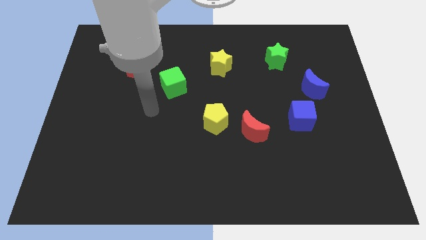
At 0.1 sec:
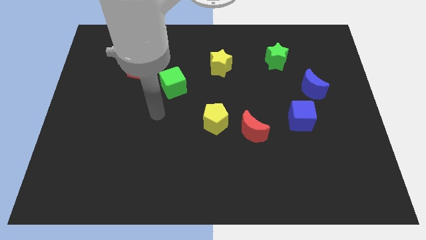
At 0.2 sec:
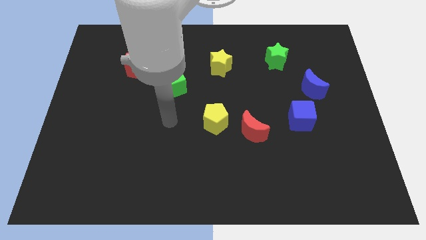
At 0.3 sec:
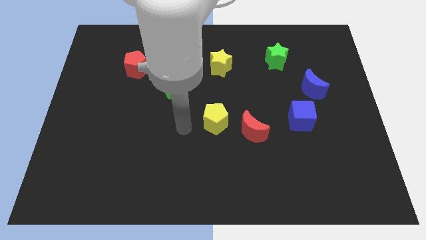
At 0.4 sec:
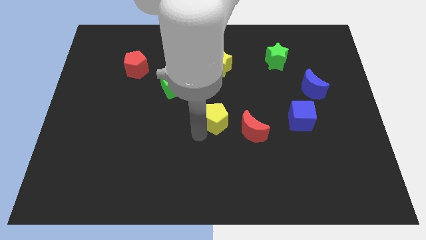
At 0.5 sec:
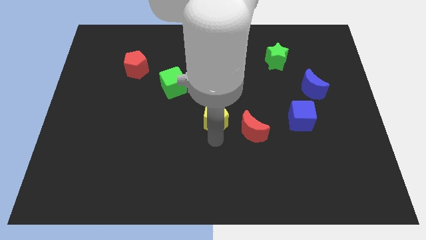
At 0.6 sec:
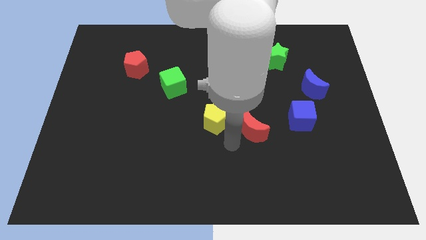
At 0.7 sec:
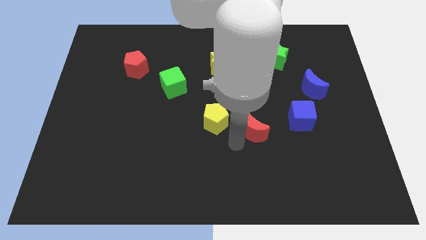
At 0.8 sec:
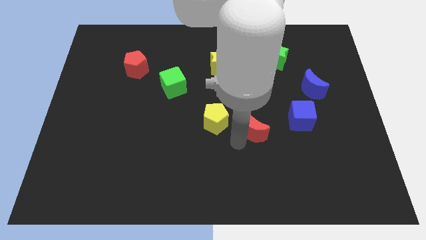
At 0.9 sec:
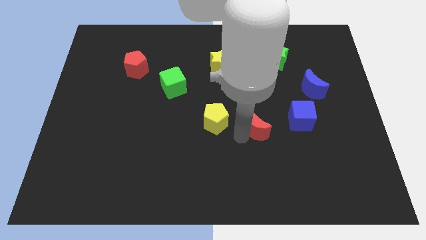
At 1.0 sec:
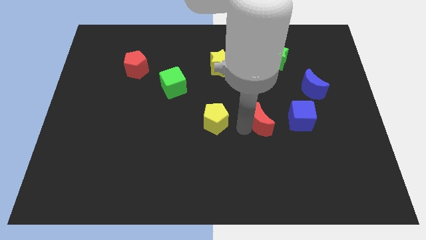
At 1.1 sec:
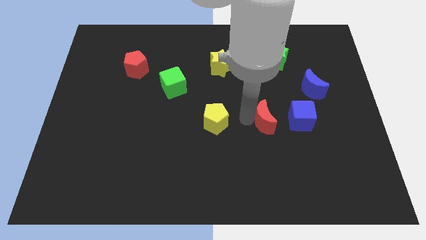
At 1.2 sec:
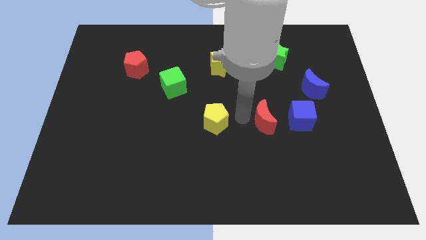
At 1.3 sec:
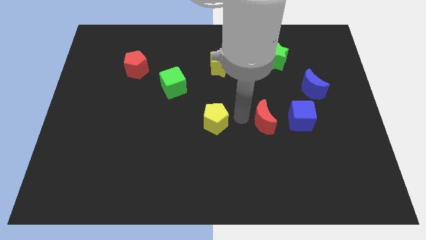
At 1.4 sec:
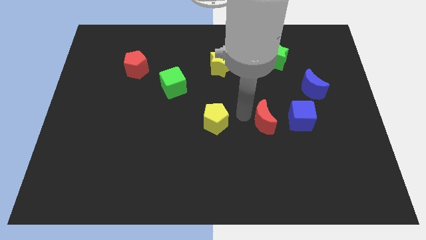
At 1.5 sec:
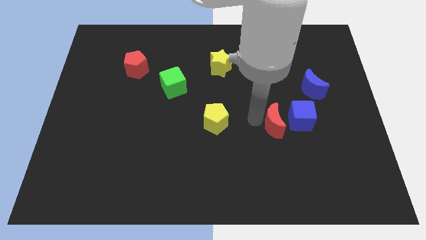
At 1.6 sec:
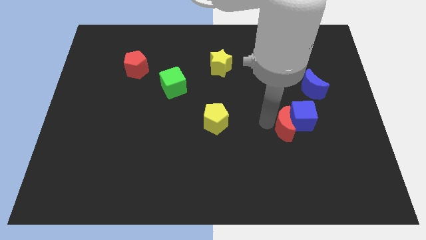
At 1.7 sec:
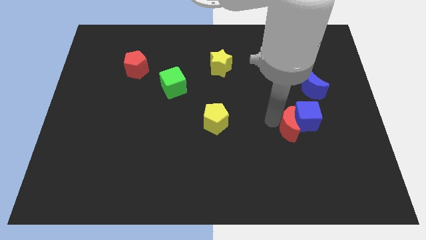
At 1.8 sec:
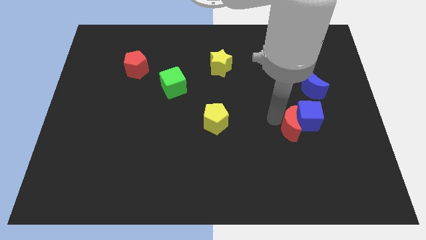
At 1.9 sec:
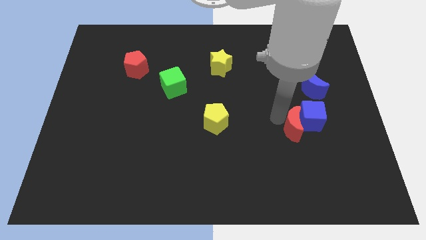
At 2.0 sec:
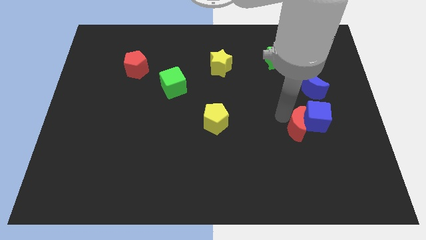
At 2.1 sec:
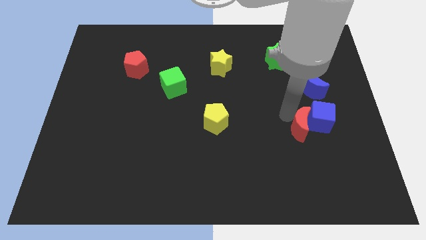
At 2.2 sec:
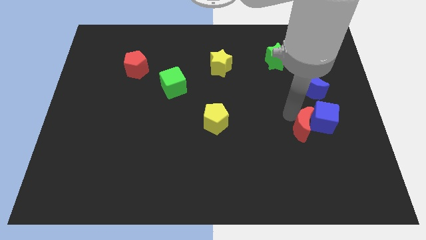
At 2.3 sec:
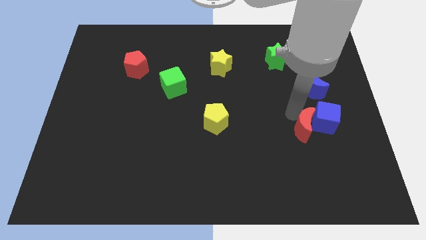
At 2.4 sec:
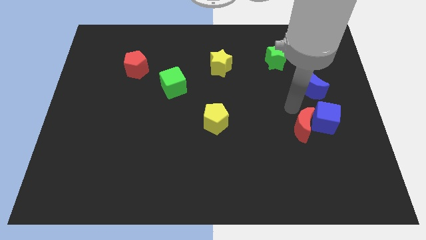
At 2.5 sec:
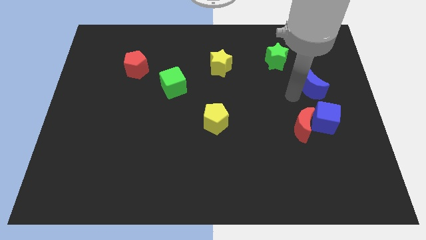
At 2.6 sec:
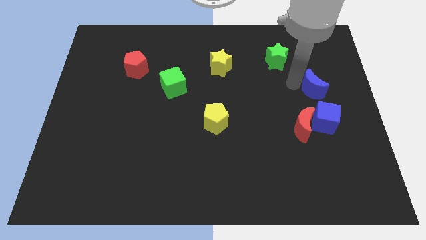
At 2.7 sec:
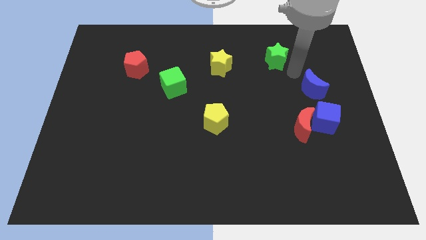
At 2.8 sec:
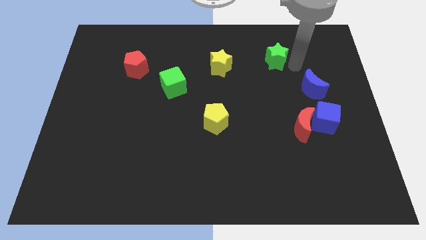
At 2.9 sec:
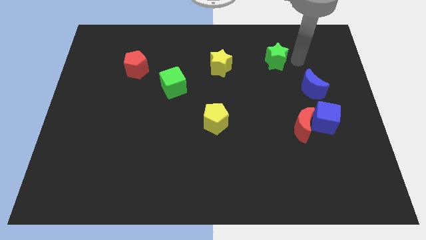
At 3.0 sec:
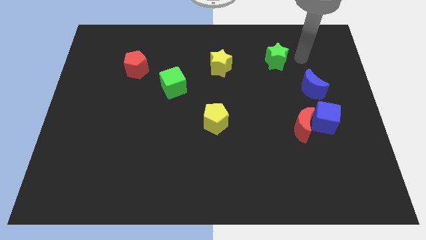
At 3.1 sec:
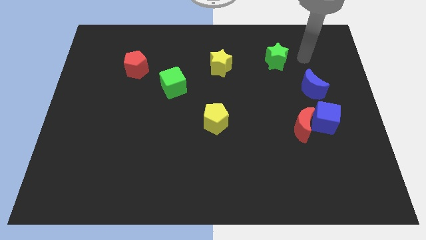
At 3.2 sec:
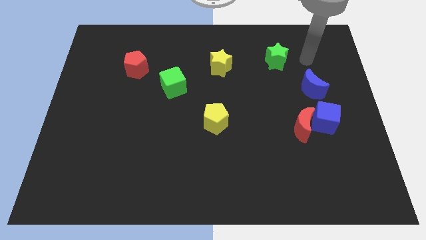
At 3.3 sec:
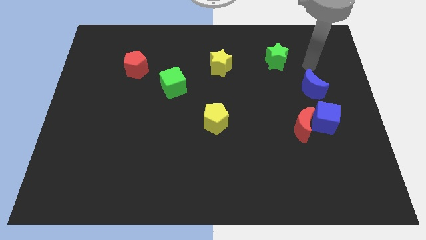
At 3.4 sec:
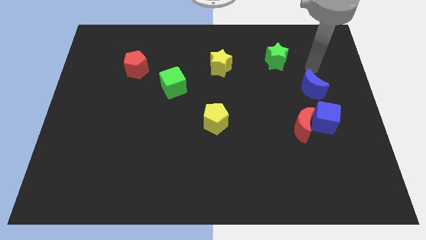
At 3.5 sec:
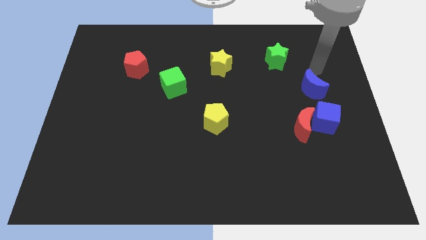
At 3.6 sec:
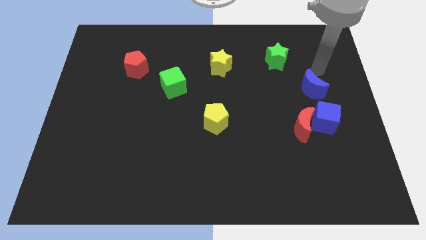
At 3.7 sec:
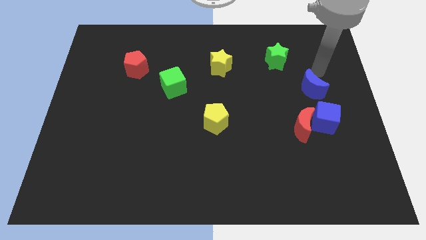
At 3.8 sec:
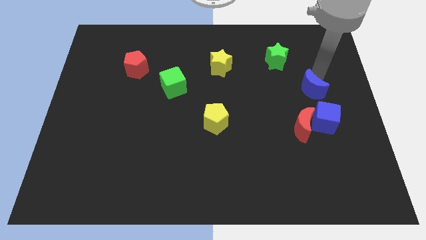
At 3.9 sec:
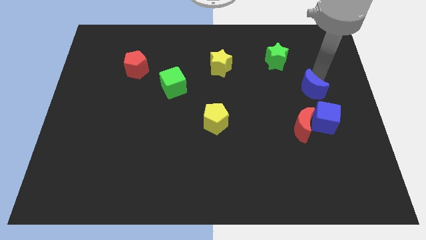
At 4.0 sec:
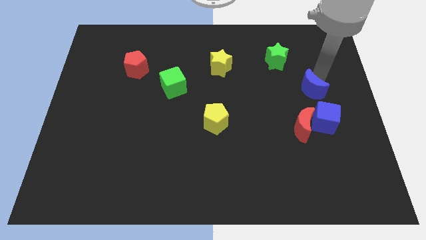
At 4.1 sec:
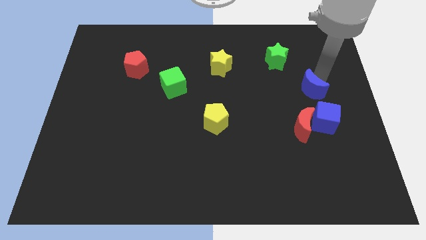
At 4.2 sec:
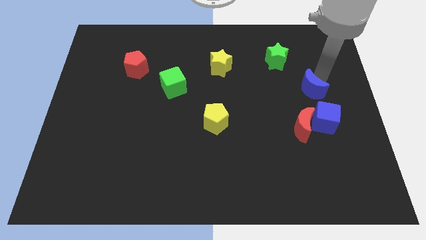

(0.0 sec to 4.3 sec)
push the red crescent into the blue cube

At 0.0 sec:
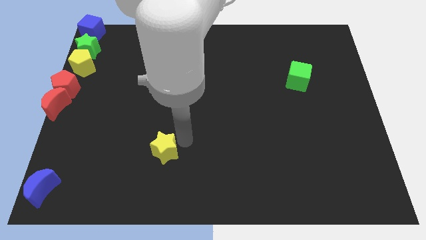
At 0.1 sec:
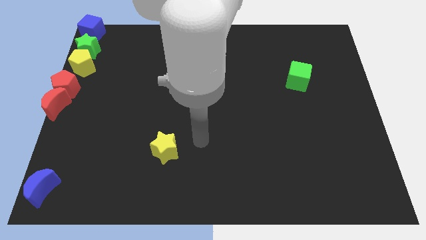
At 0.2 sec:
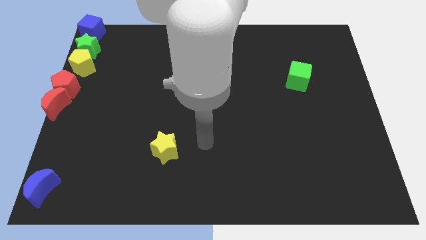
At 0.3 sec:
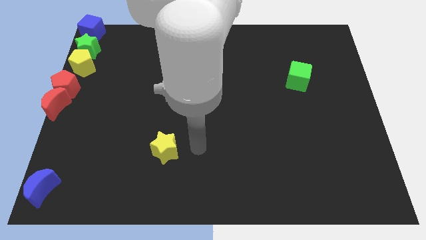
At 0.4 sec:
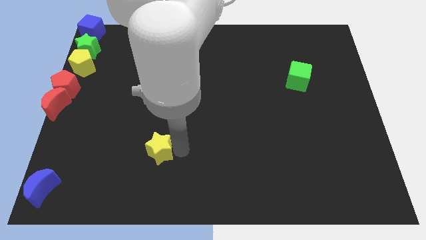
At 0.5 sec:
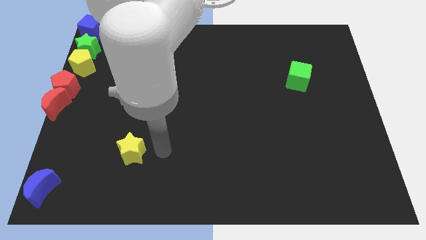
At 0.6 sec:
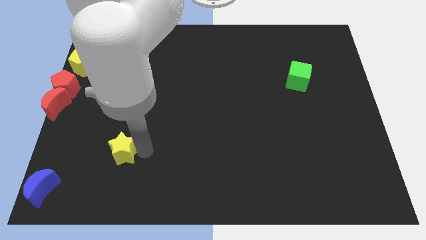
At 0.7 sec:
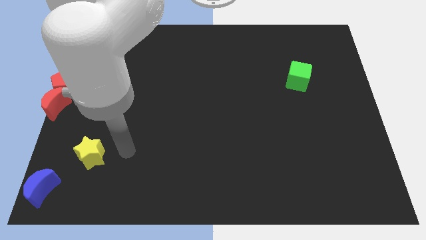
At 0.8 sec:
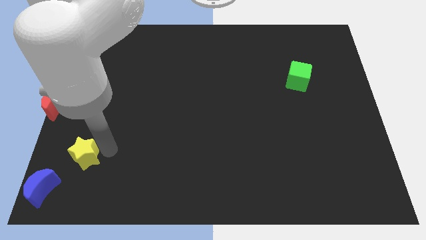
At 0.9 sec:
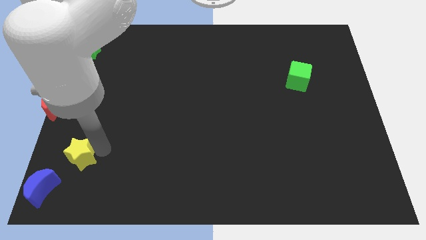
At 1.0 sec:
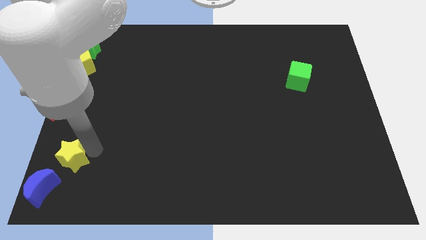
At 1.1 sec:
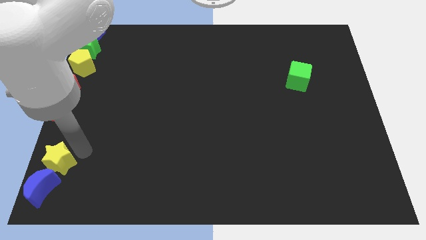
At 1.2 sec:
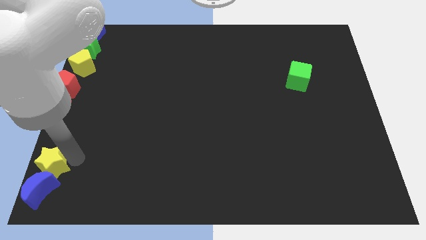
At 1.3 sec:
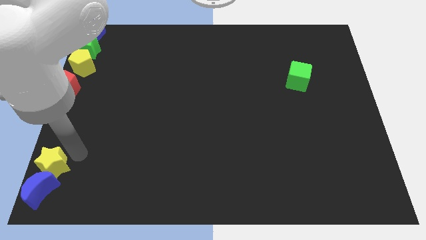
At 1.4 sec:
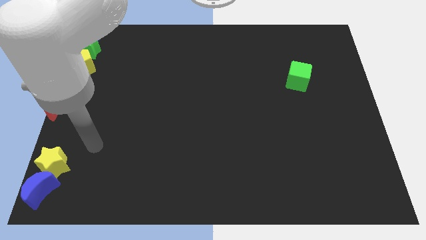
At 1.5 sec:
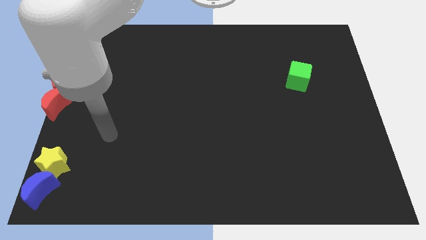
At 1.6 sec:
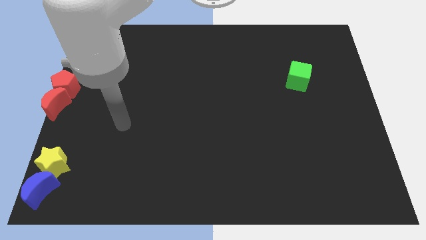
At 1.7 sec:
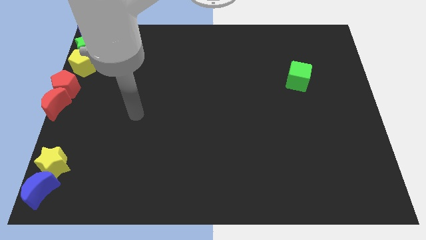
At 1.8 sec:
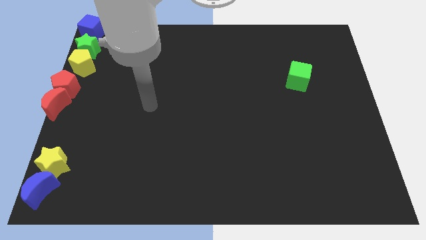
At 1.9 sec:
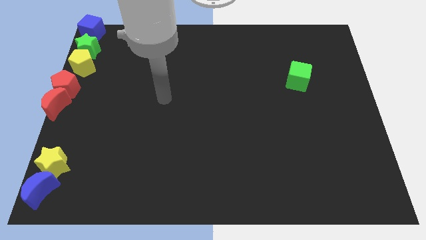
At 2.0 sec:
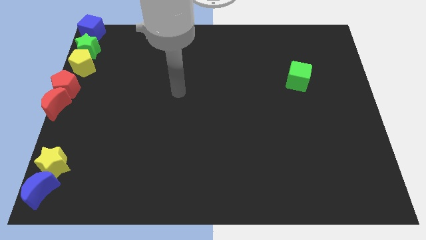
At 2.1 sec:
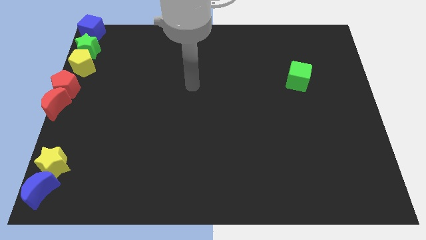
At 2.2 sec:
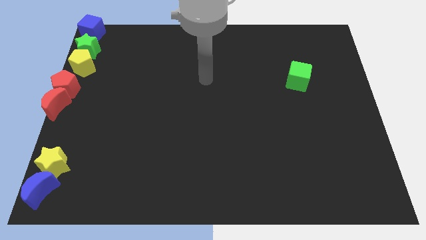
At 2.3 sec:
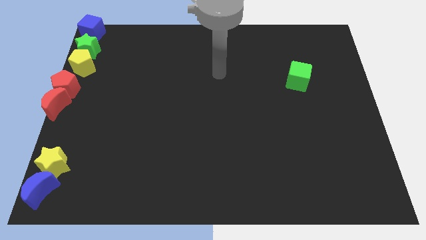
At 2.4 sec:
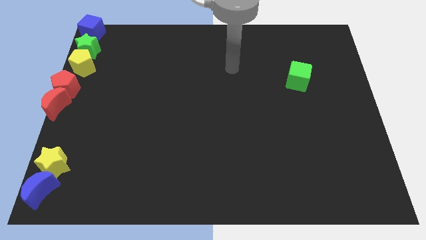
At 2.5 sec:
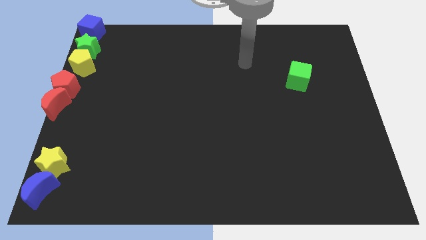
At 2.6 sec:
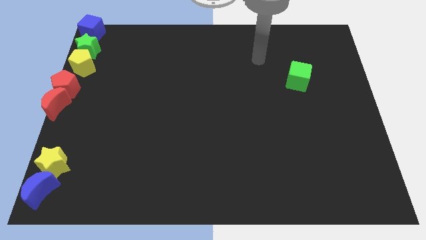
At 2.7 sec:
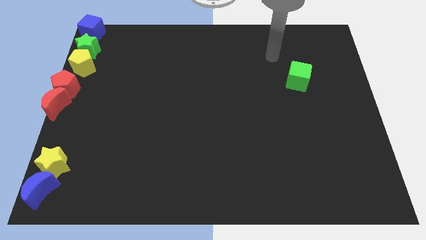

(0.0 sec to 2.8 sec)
move yellow star to the top of blue moon

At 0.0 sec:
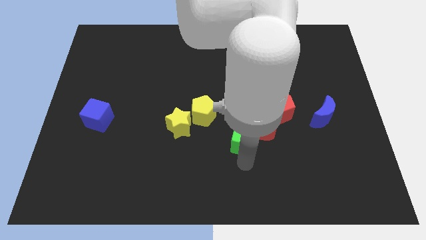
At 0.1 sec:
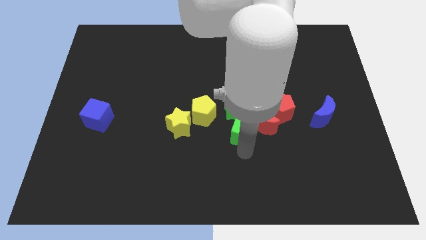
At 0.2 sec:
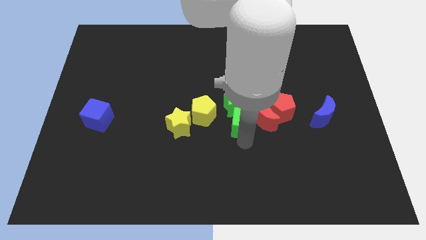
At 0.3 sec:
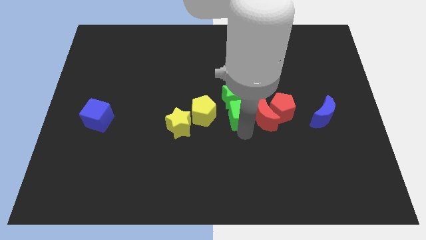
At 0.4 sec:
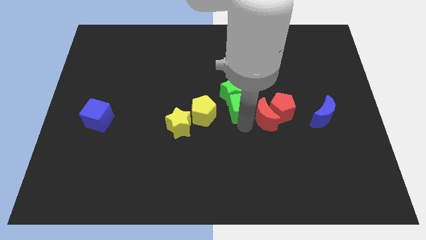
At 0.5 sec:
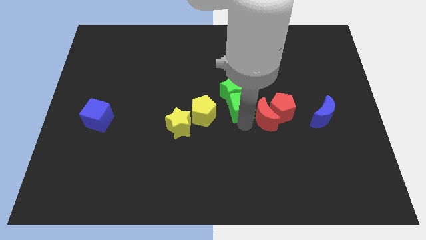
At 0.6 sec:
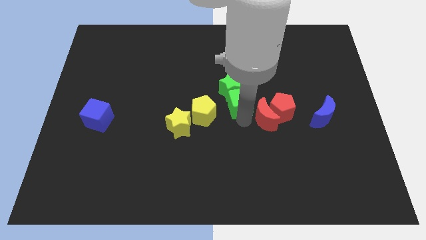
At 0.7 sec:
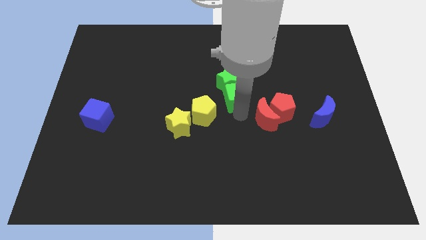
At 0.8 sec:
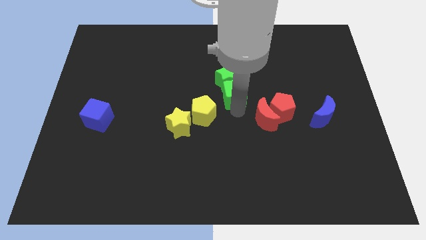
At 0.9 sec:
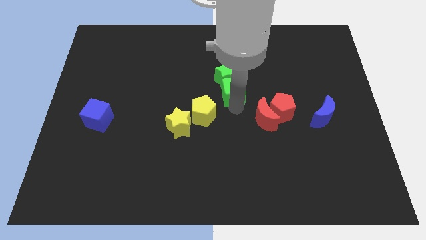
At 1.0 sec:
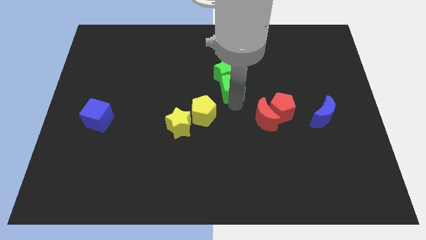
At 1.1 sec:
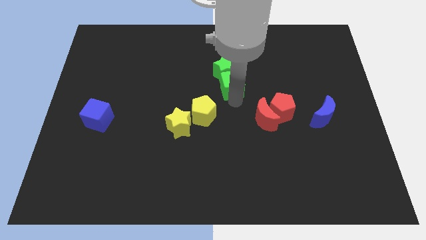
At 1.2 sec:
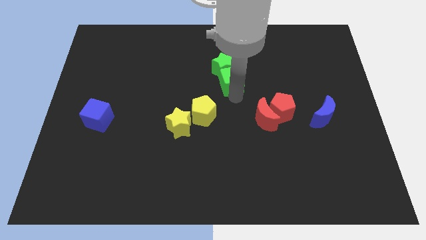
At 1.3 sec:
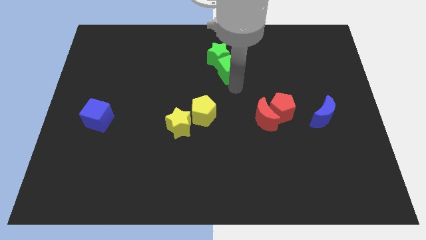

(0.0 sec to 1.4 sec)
push the green cube into the green star

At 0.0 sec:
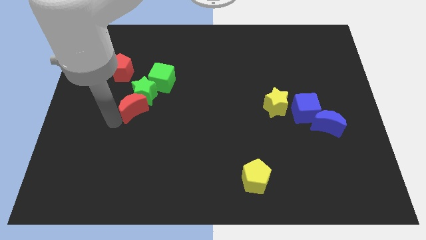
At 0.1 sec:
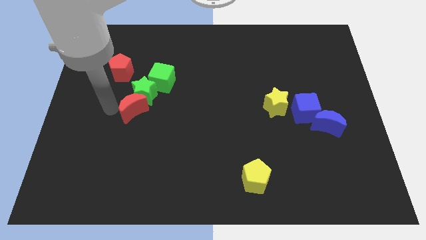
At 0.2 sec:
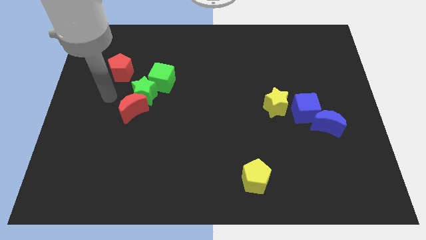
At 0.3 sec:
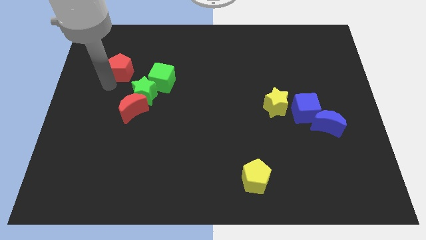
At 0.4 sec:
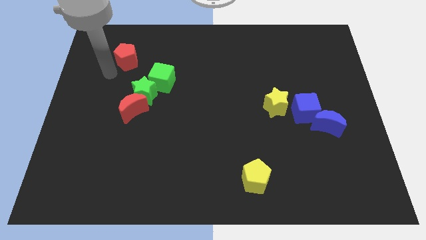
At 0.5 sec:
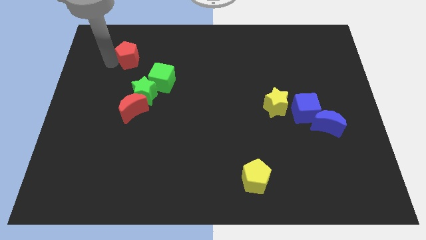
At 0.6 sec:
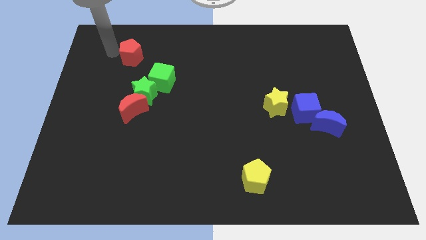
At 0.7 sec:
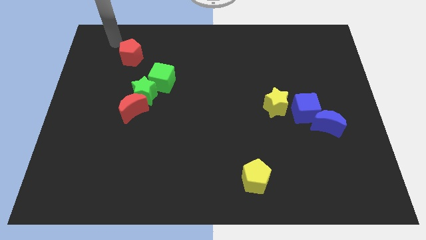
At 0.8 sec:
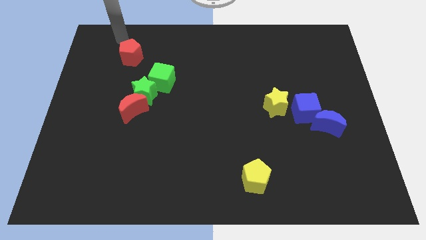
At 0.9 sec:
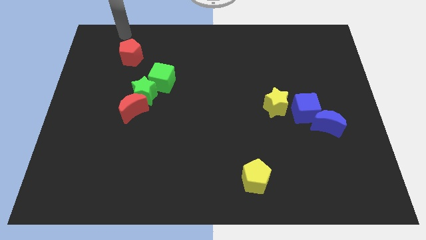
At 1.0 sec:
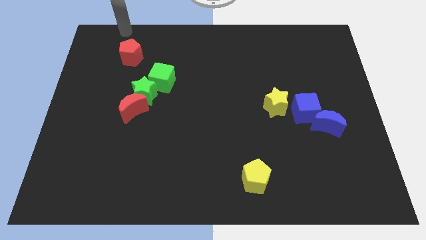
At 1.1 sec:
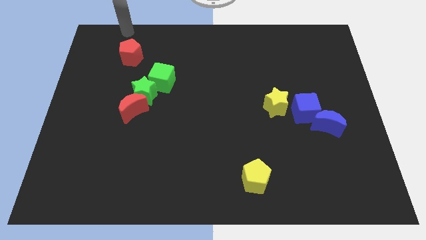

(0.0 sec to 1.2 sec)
move the red pentagon towards the top of the board
